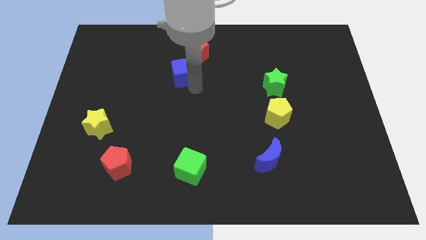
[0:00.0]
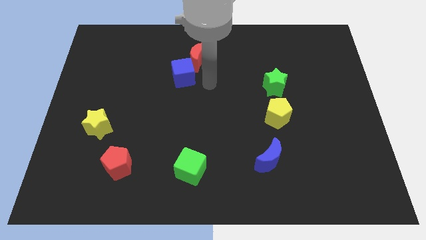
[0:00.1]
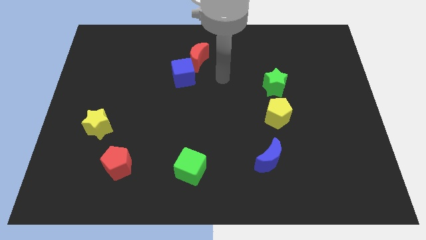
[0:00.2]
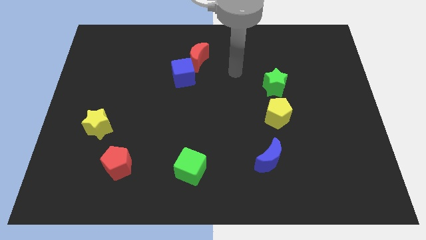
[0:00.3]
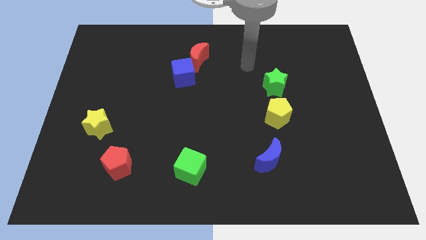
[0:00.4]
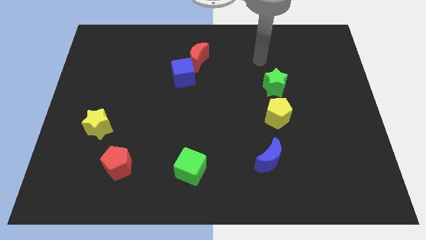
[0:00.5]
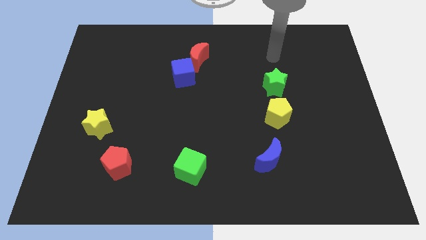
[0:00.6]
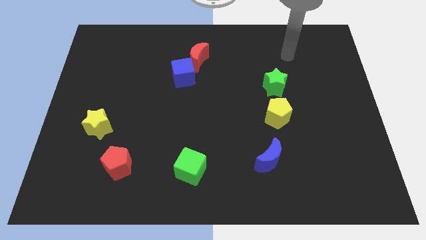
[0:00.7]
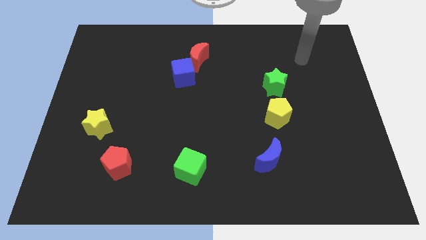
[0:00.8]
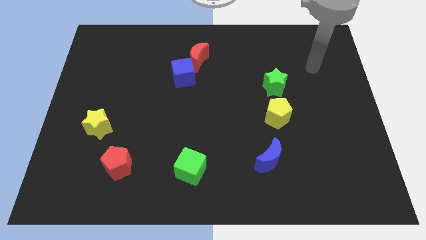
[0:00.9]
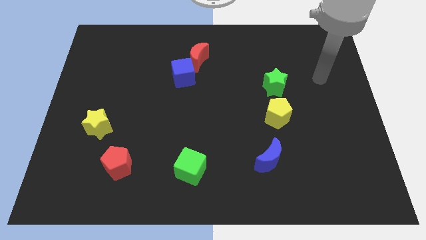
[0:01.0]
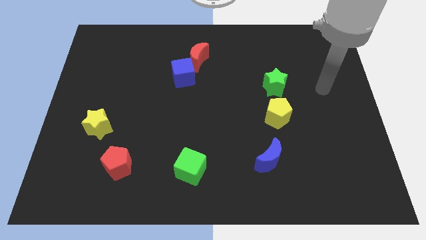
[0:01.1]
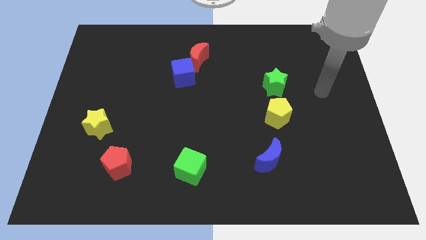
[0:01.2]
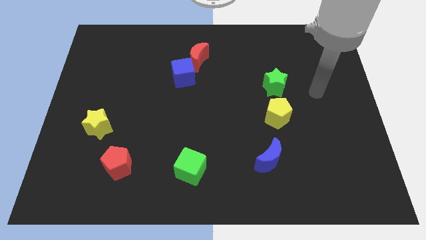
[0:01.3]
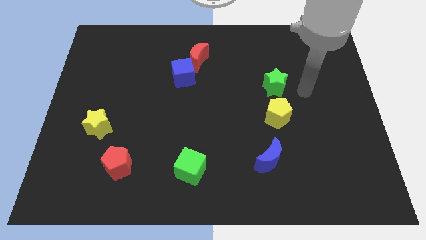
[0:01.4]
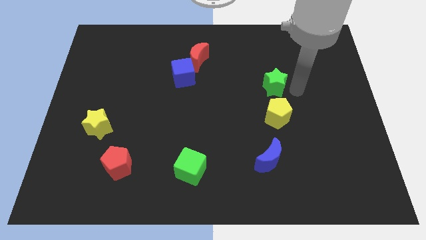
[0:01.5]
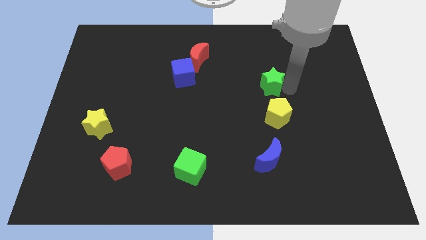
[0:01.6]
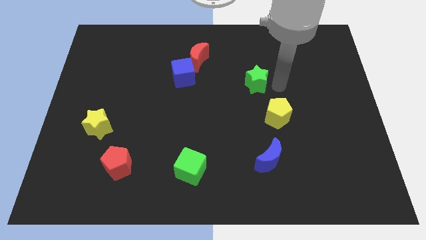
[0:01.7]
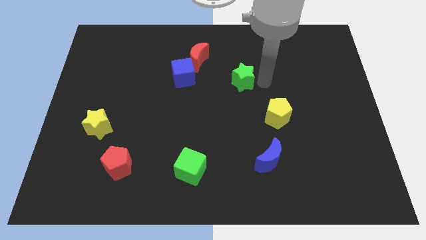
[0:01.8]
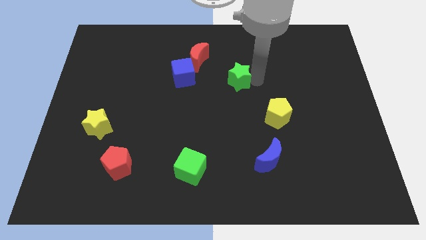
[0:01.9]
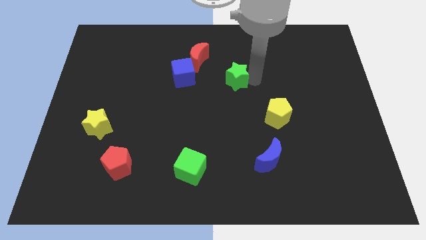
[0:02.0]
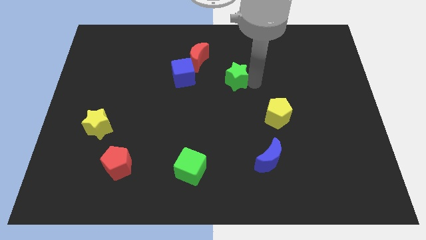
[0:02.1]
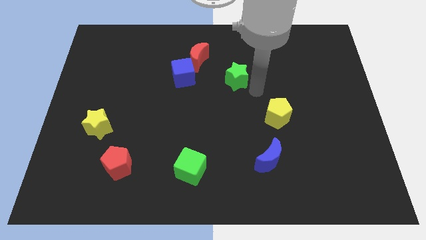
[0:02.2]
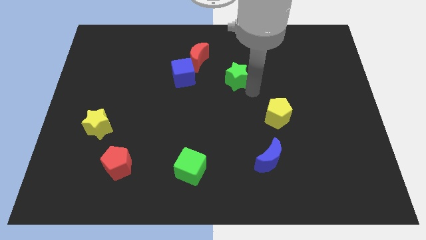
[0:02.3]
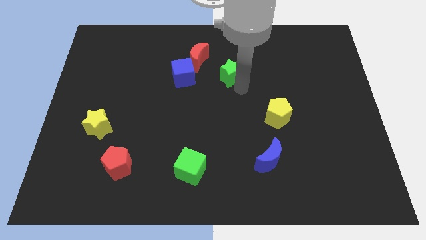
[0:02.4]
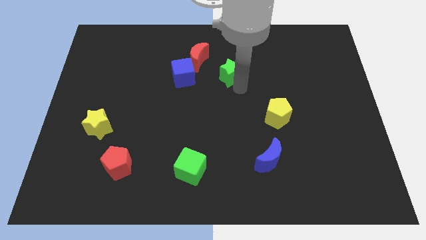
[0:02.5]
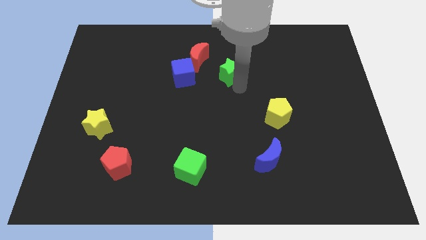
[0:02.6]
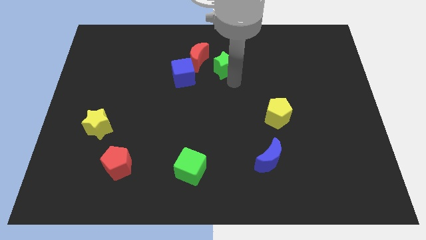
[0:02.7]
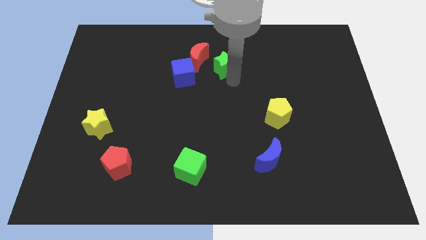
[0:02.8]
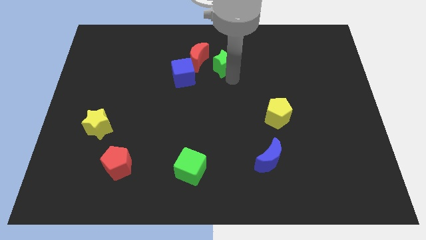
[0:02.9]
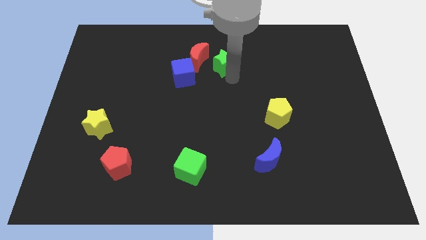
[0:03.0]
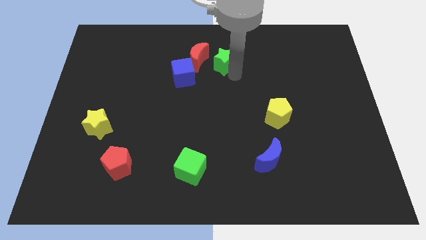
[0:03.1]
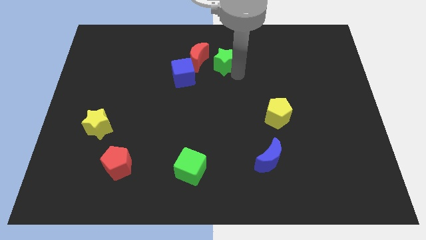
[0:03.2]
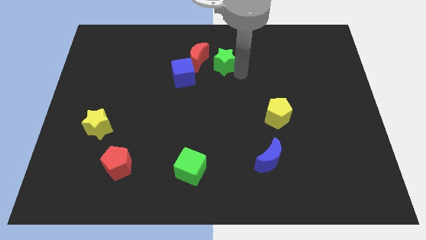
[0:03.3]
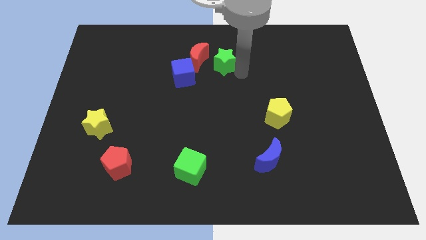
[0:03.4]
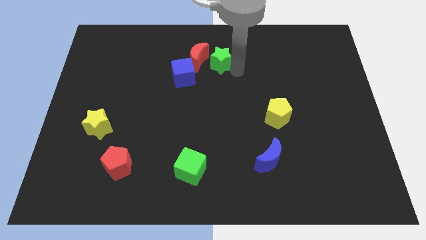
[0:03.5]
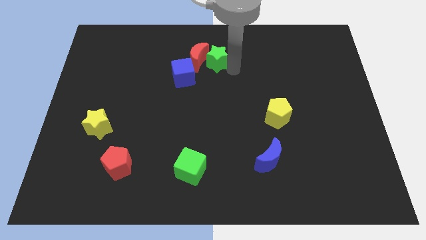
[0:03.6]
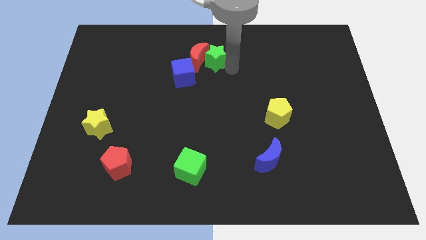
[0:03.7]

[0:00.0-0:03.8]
move green star into red crescent

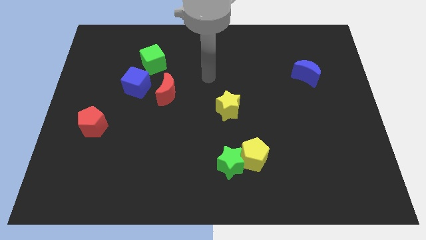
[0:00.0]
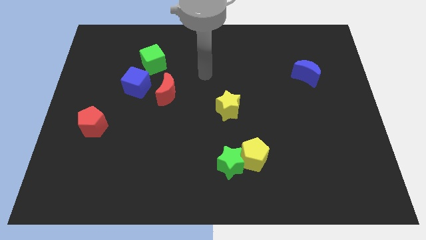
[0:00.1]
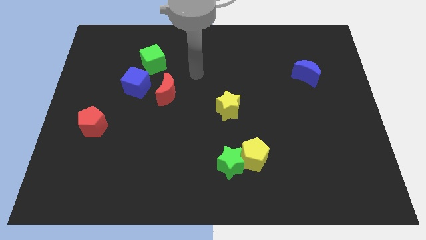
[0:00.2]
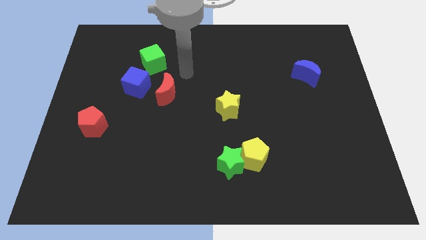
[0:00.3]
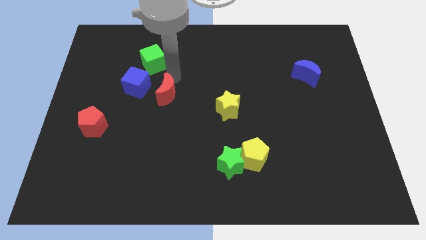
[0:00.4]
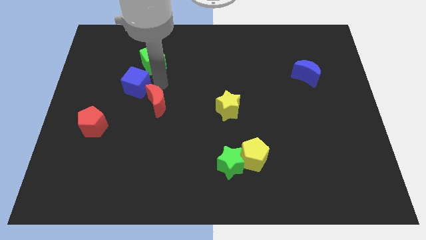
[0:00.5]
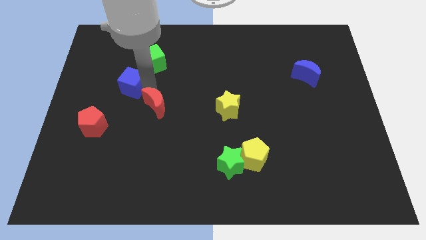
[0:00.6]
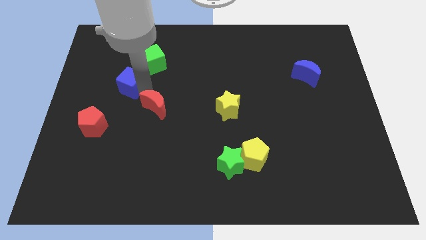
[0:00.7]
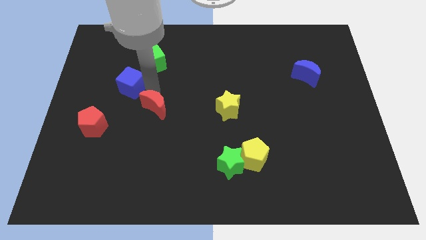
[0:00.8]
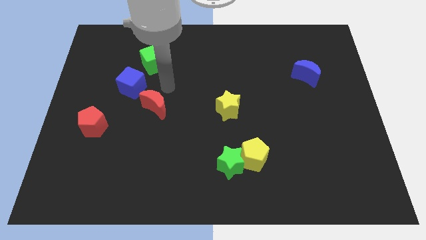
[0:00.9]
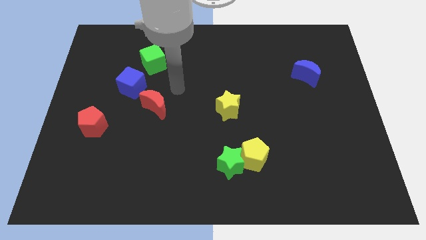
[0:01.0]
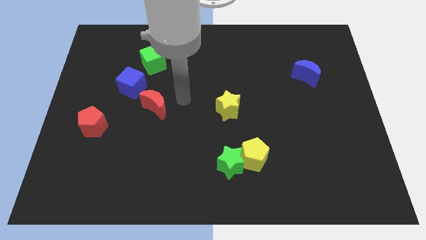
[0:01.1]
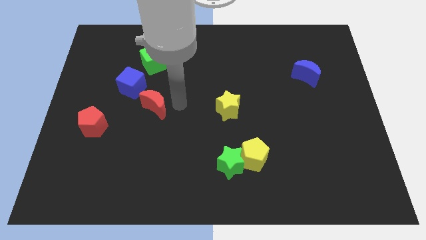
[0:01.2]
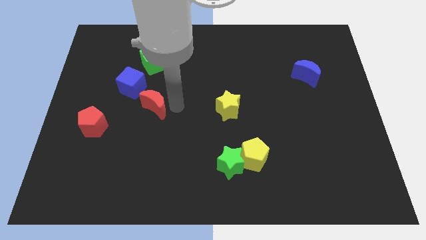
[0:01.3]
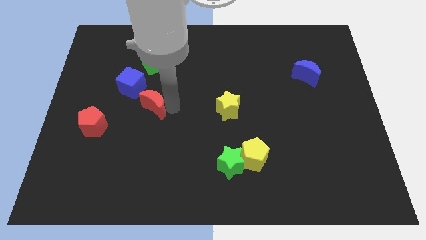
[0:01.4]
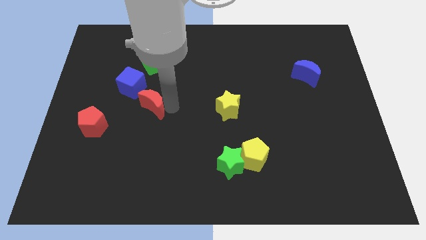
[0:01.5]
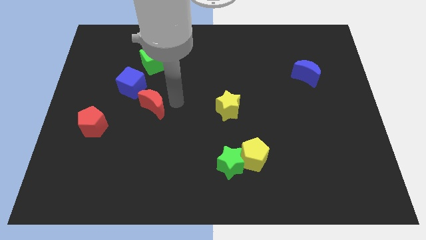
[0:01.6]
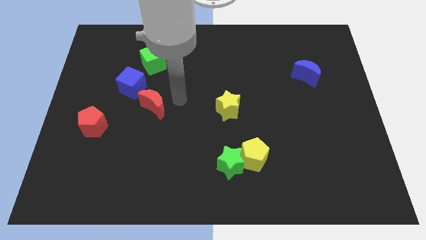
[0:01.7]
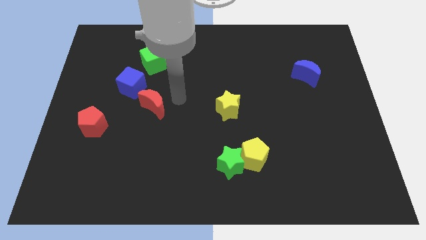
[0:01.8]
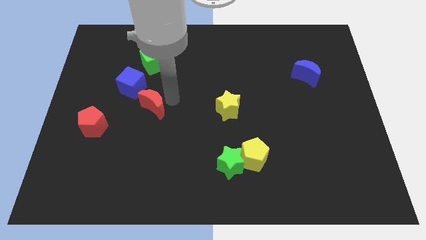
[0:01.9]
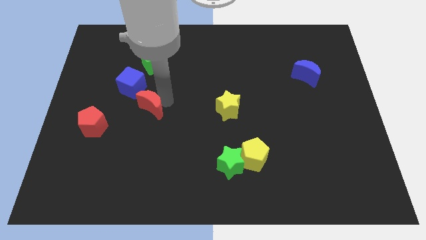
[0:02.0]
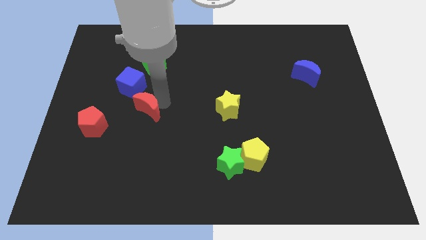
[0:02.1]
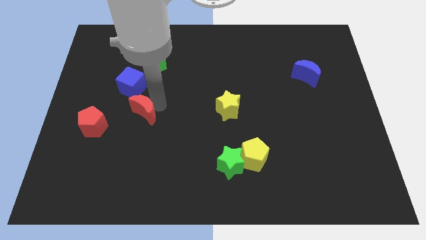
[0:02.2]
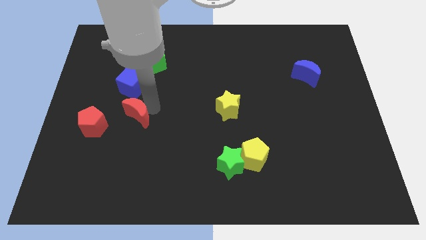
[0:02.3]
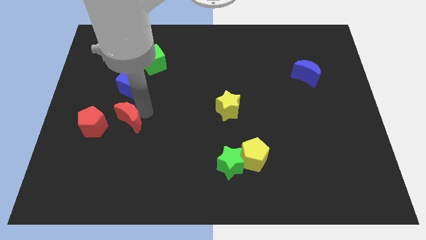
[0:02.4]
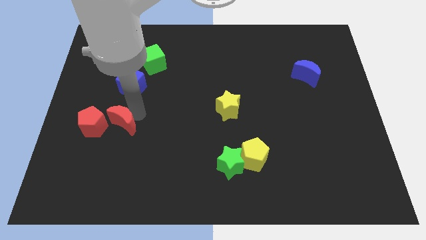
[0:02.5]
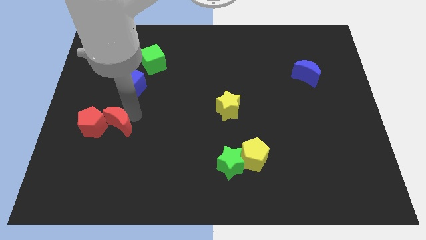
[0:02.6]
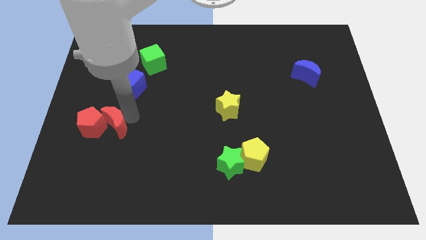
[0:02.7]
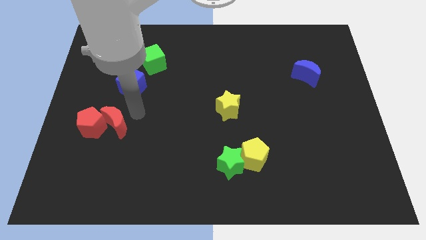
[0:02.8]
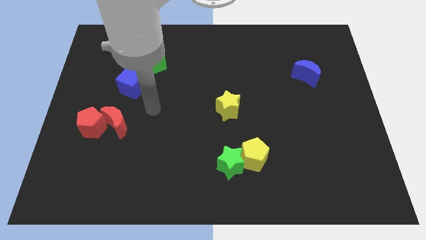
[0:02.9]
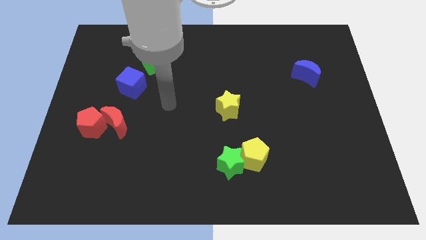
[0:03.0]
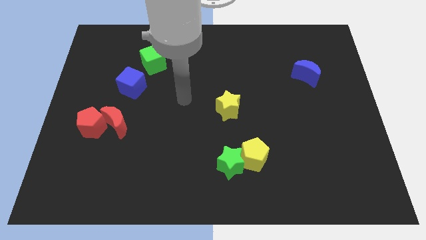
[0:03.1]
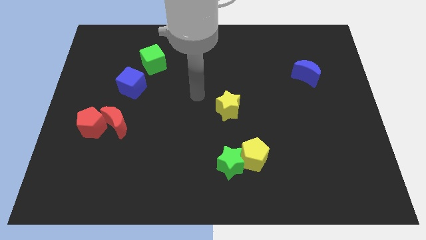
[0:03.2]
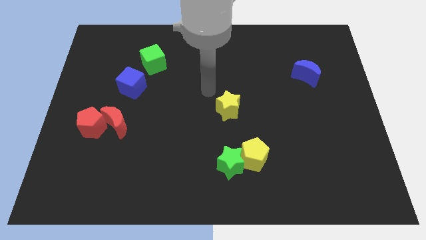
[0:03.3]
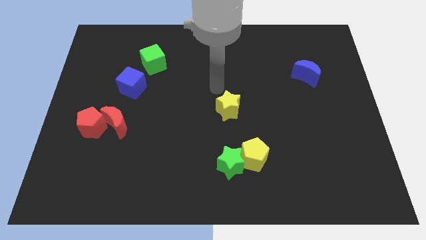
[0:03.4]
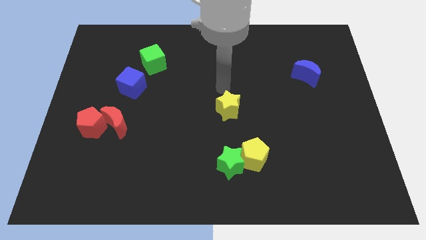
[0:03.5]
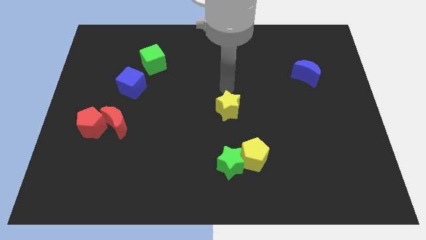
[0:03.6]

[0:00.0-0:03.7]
move the red crescent into the right side of the red pentagon

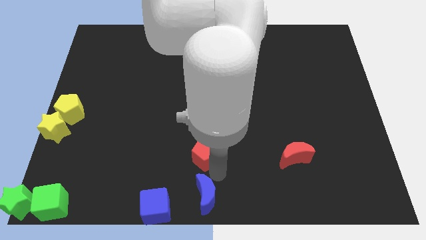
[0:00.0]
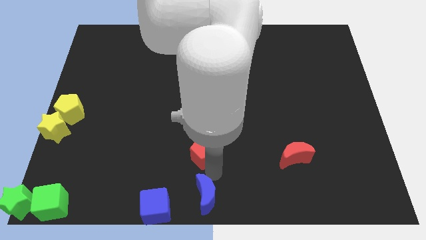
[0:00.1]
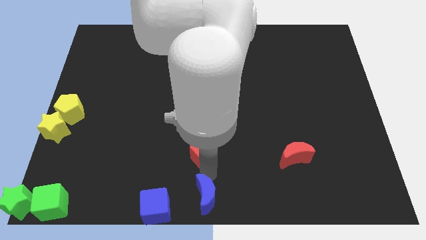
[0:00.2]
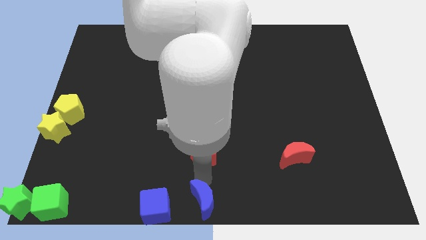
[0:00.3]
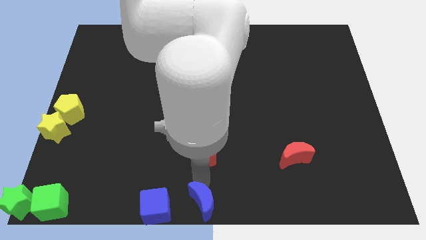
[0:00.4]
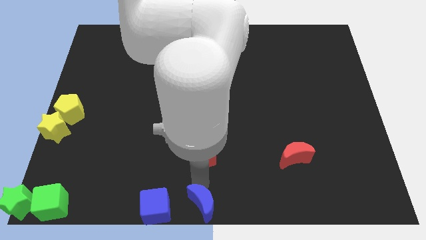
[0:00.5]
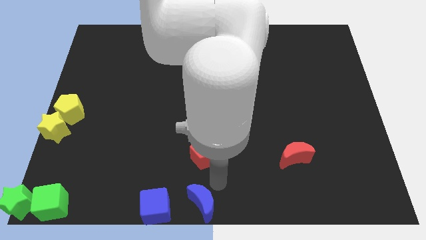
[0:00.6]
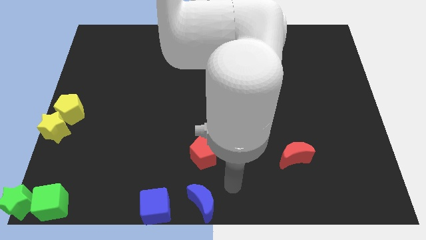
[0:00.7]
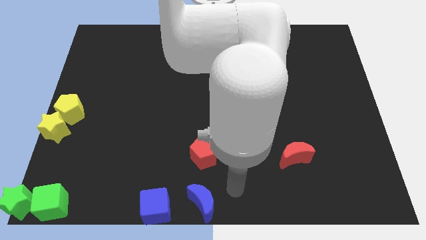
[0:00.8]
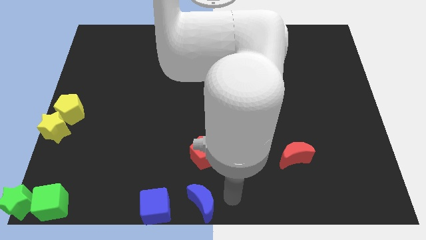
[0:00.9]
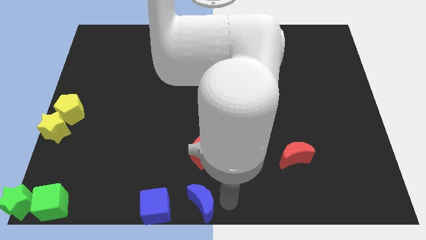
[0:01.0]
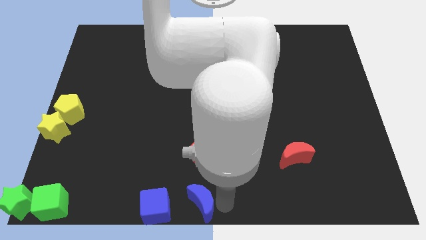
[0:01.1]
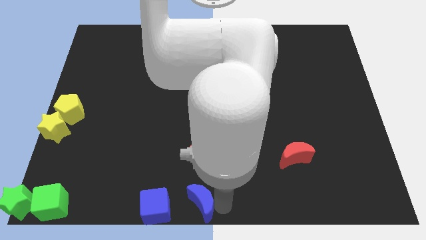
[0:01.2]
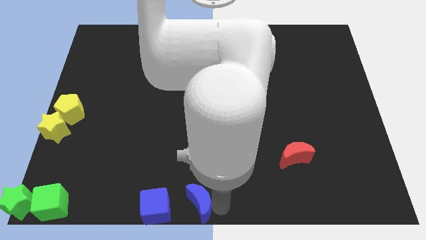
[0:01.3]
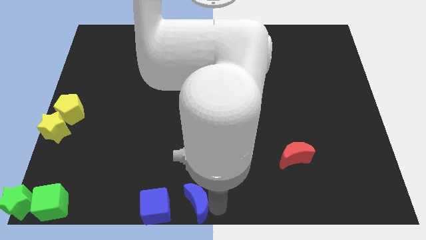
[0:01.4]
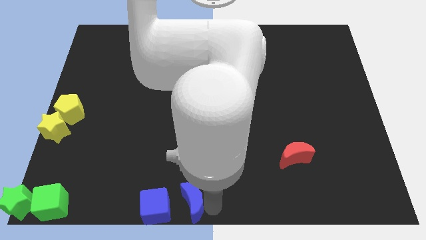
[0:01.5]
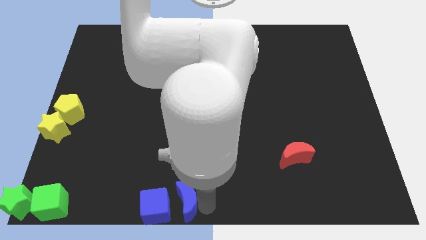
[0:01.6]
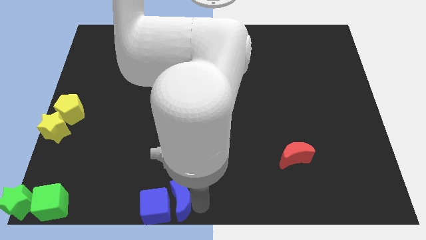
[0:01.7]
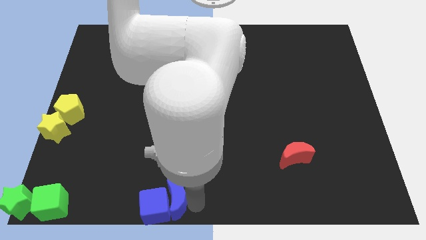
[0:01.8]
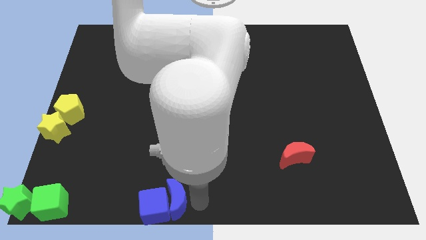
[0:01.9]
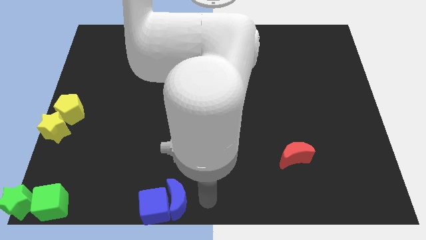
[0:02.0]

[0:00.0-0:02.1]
push the blue crescent to right side of the blue cube
